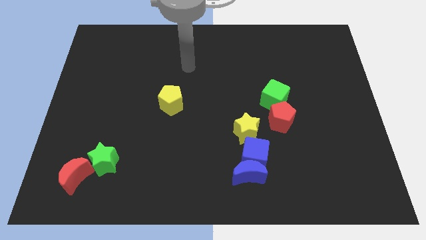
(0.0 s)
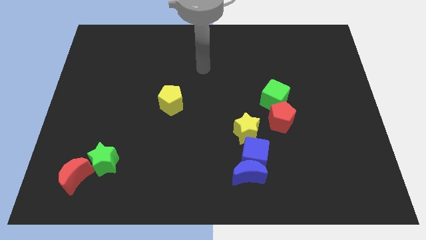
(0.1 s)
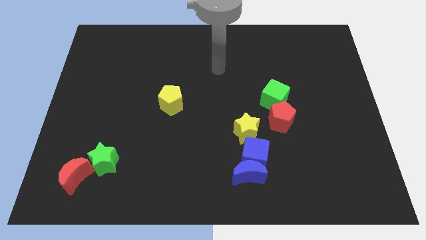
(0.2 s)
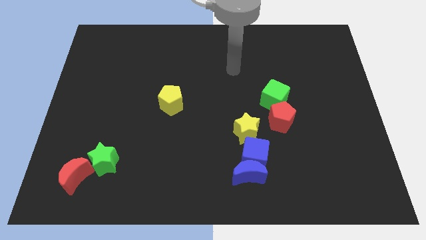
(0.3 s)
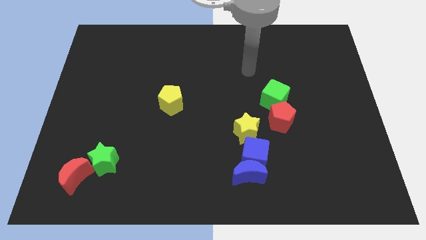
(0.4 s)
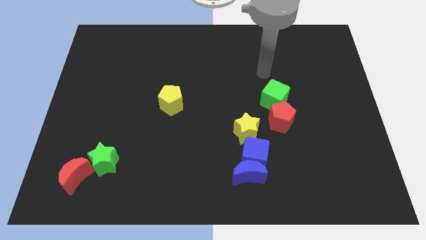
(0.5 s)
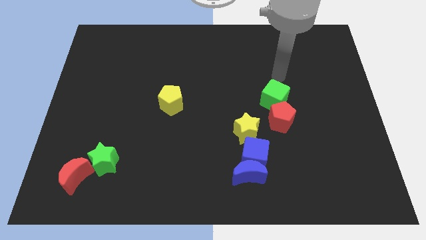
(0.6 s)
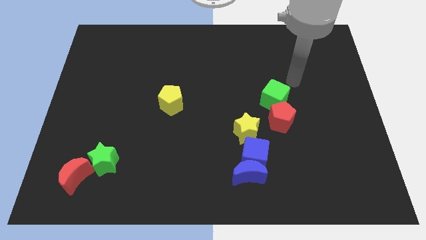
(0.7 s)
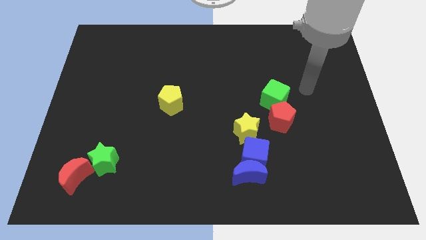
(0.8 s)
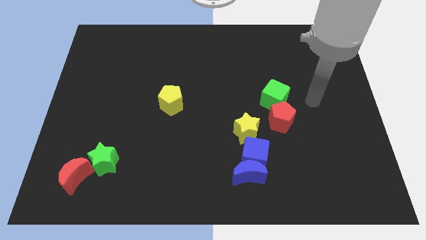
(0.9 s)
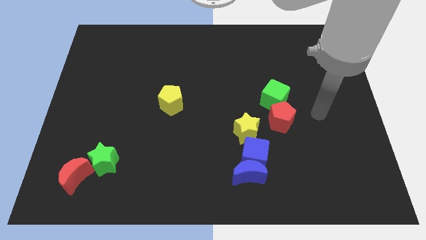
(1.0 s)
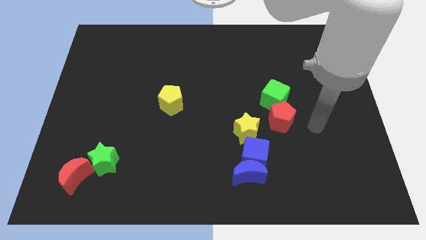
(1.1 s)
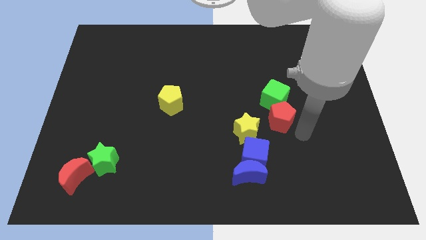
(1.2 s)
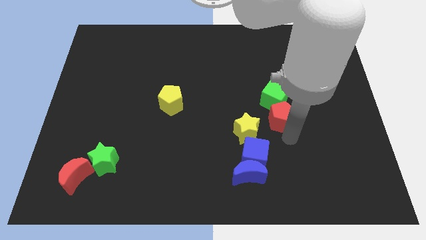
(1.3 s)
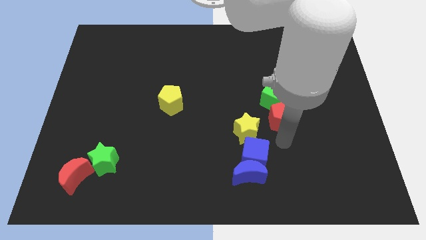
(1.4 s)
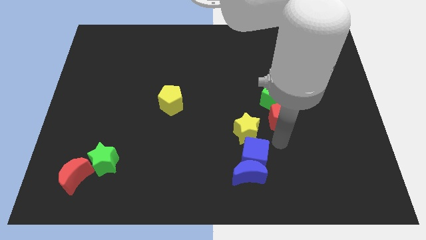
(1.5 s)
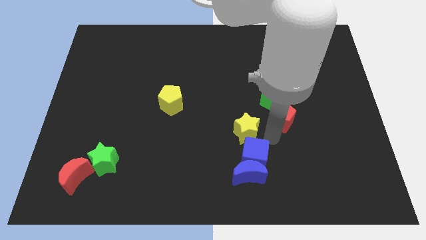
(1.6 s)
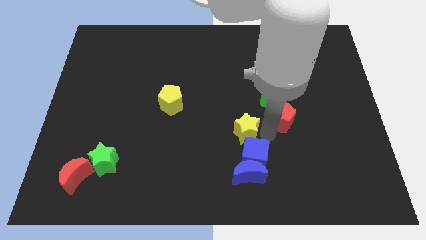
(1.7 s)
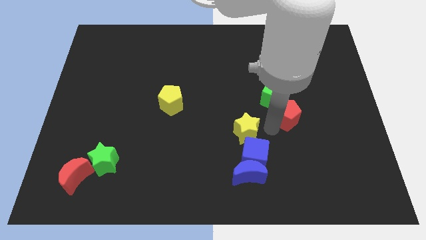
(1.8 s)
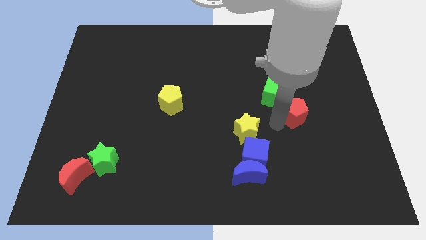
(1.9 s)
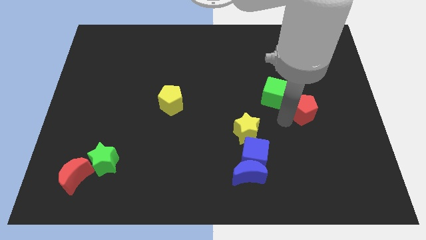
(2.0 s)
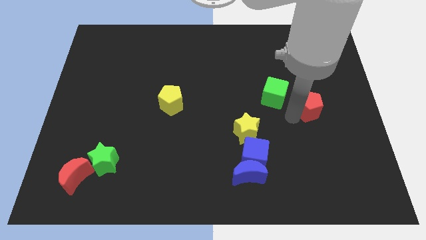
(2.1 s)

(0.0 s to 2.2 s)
separate the red pentagon and the green cube

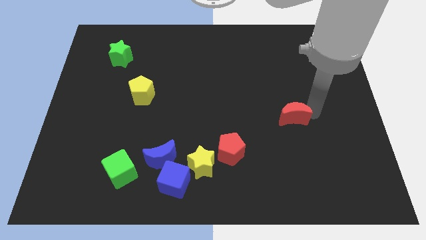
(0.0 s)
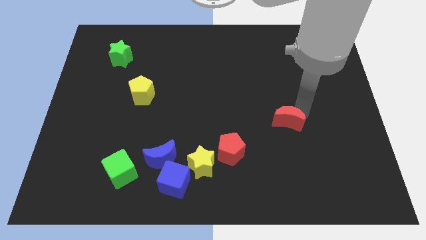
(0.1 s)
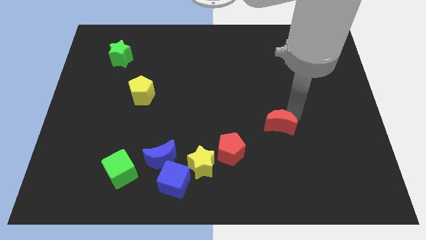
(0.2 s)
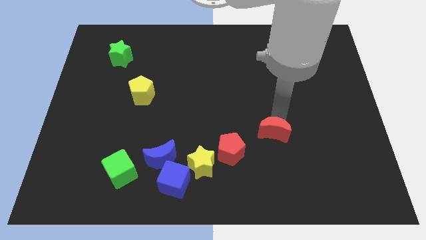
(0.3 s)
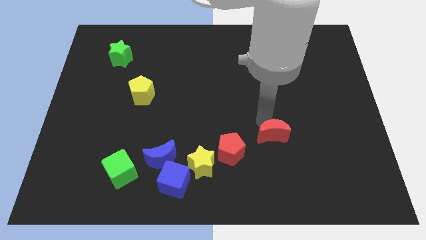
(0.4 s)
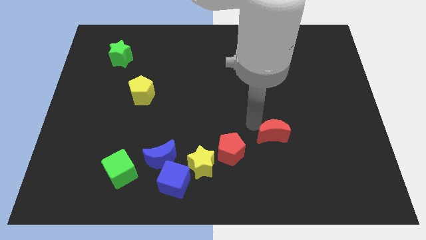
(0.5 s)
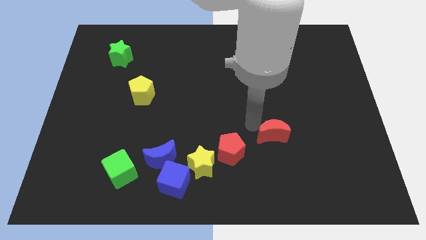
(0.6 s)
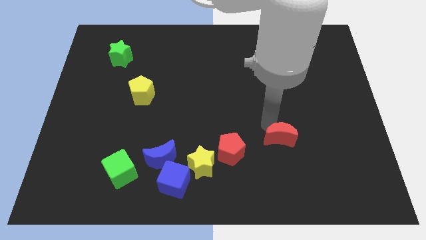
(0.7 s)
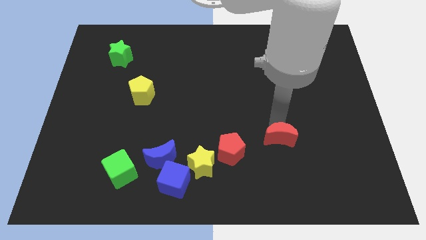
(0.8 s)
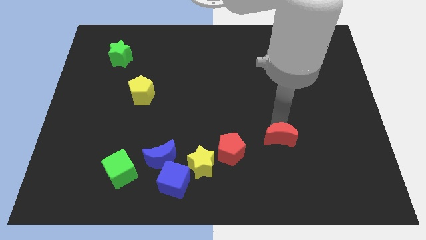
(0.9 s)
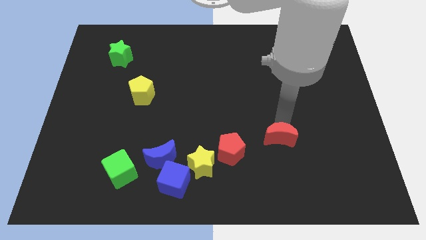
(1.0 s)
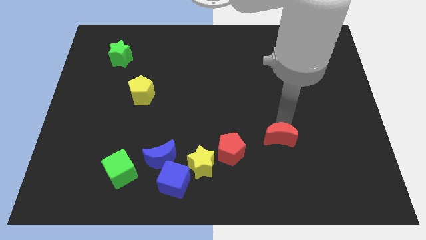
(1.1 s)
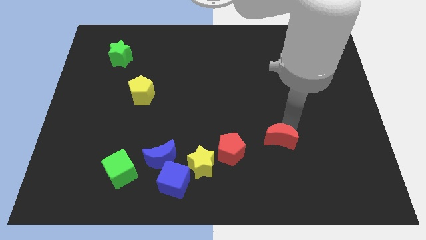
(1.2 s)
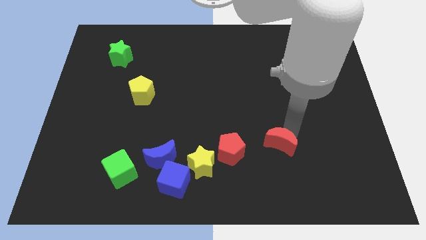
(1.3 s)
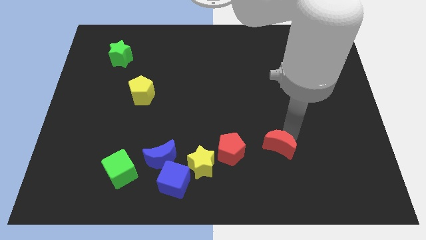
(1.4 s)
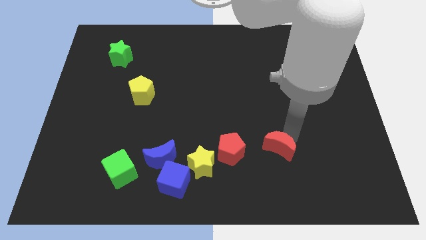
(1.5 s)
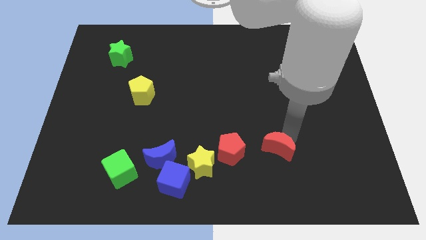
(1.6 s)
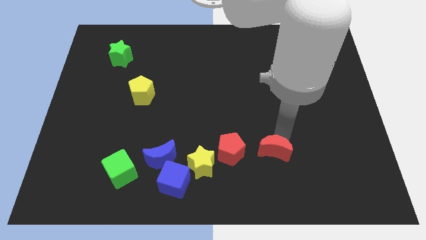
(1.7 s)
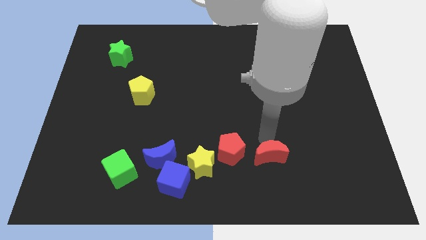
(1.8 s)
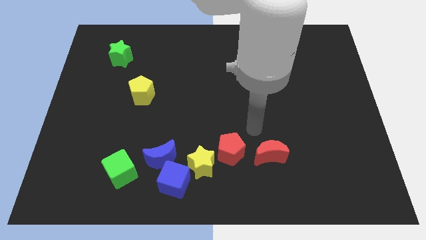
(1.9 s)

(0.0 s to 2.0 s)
move the red crescent to the right of red pentagon

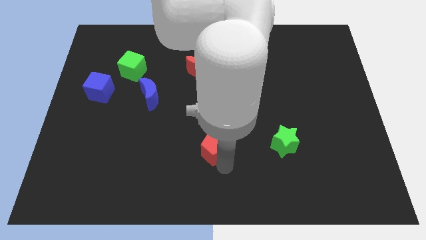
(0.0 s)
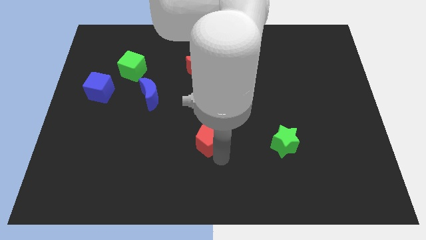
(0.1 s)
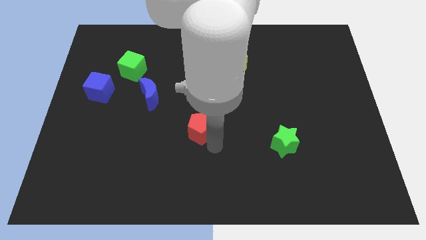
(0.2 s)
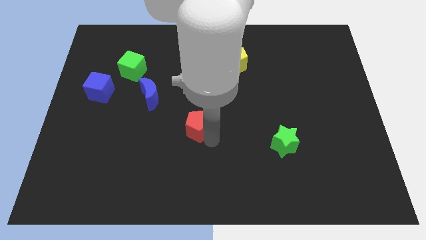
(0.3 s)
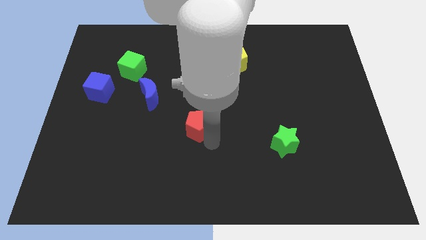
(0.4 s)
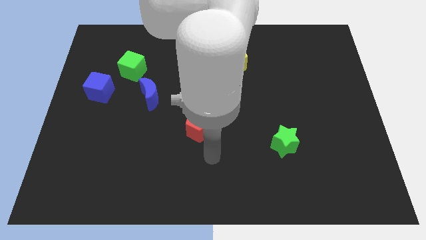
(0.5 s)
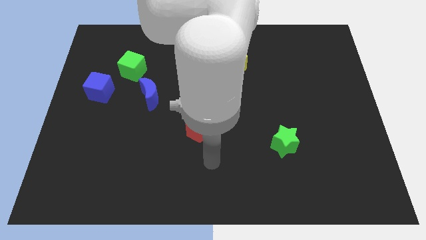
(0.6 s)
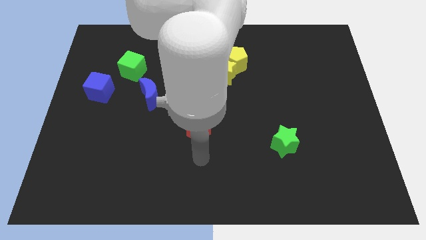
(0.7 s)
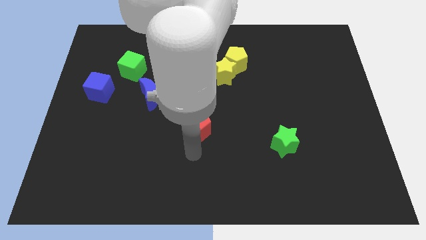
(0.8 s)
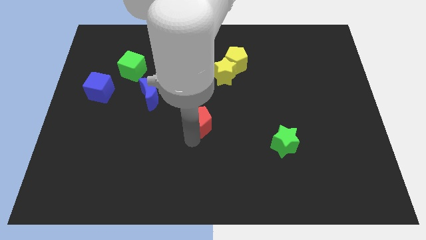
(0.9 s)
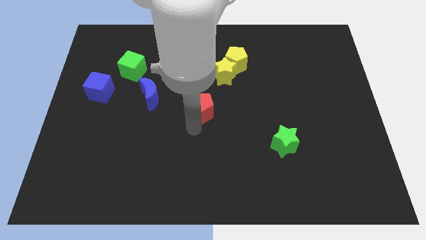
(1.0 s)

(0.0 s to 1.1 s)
place the red pentagon at the bottom of red moon

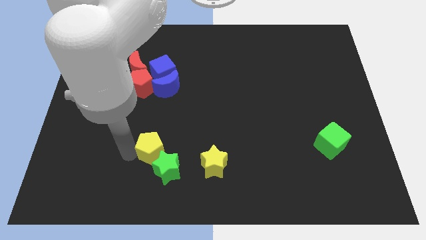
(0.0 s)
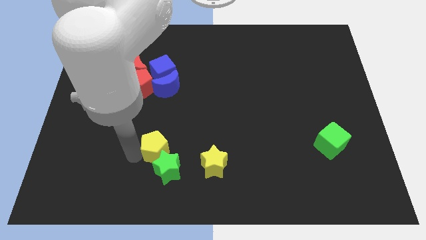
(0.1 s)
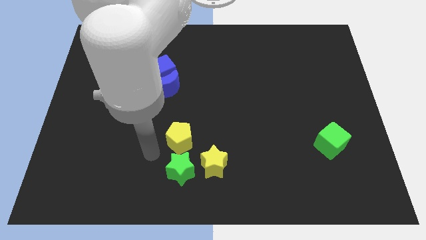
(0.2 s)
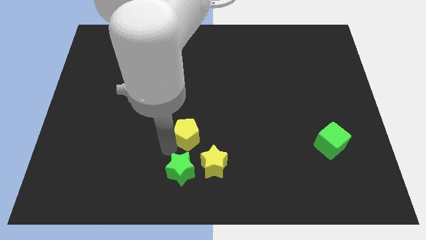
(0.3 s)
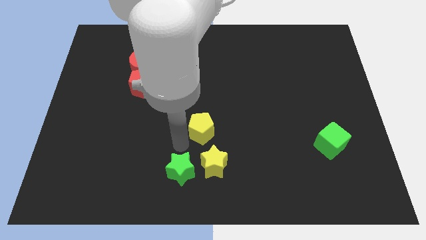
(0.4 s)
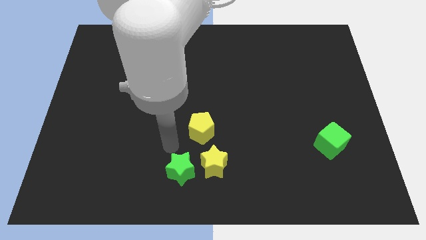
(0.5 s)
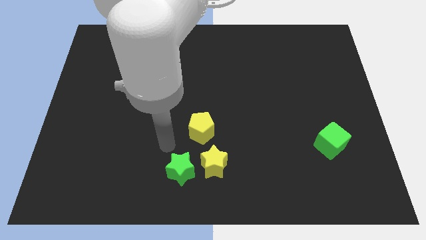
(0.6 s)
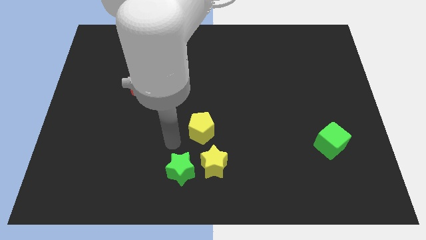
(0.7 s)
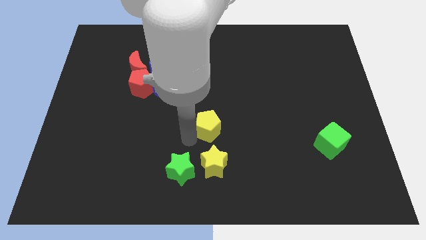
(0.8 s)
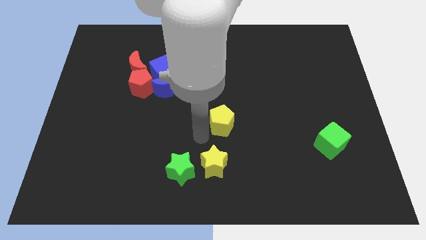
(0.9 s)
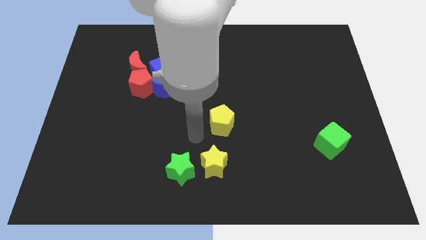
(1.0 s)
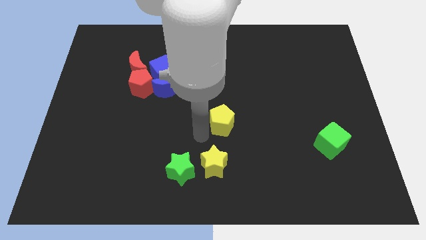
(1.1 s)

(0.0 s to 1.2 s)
separate the yellow pentagon from the green star

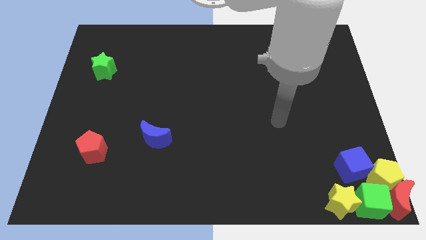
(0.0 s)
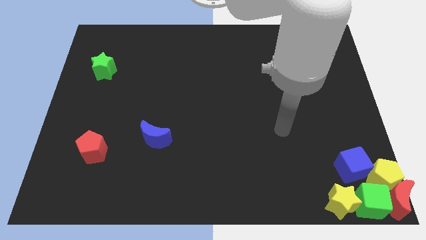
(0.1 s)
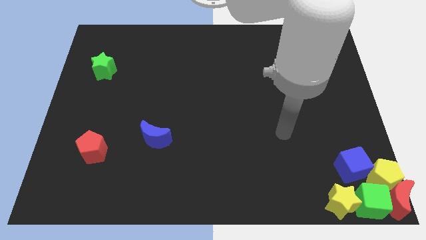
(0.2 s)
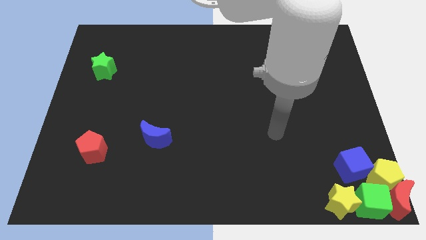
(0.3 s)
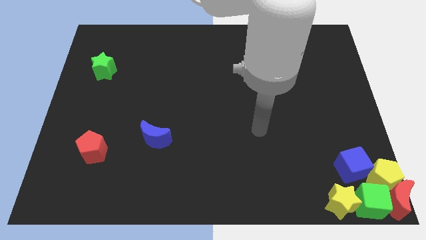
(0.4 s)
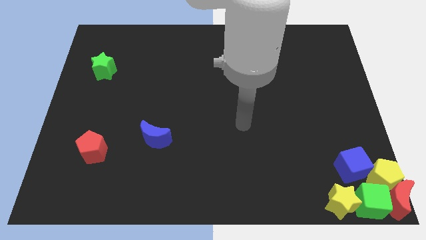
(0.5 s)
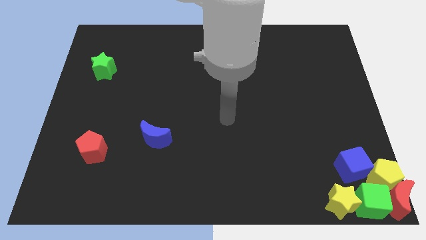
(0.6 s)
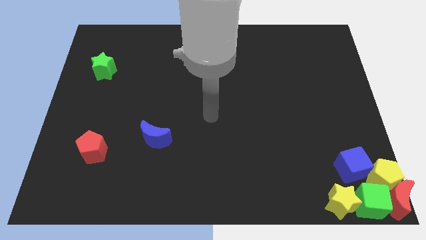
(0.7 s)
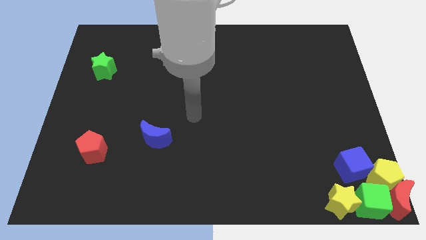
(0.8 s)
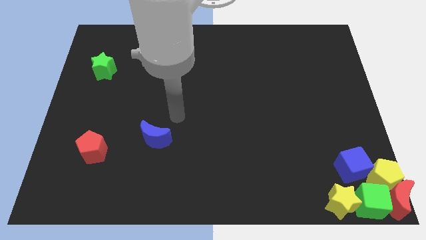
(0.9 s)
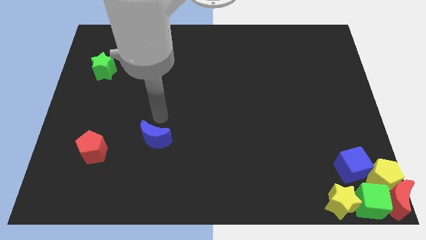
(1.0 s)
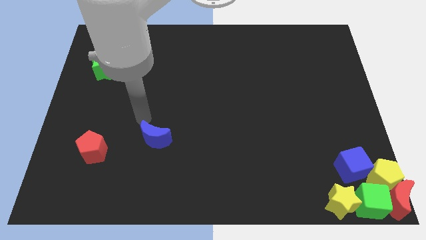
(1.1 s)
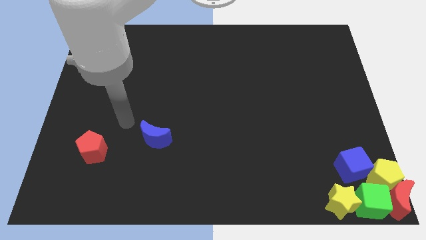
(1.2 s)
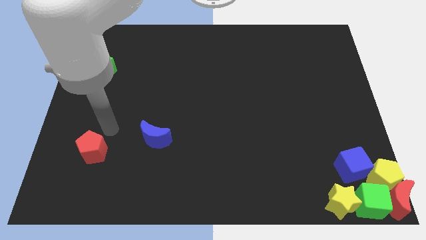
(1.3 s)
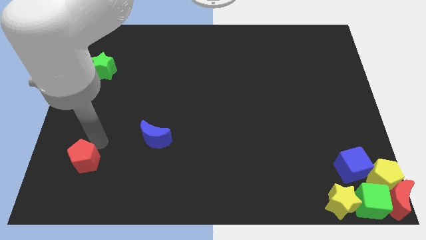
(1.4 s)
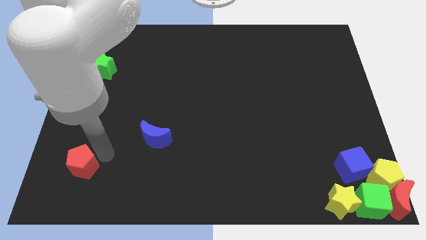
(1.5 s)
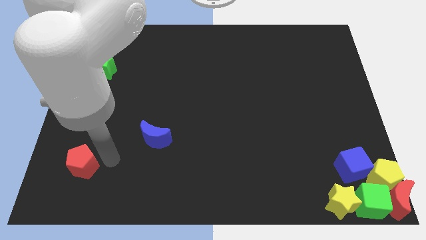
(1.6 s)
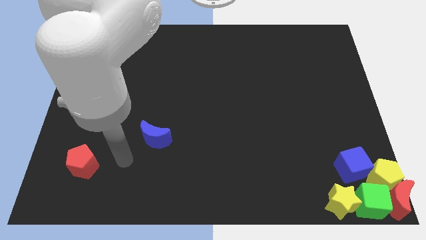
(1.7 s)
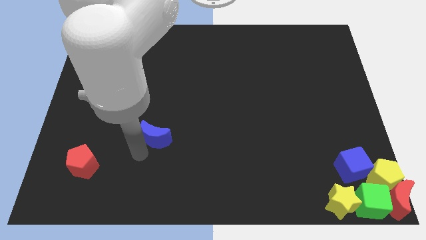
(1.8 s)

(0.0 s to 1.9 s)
push the red pentagon slightly to the bottom side of the board

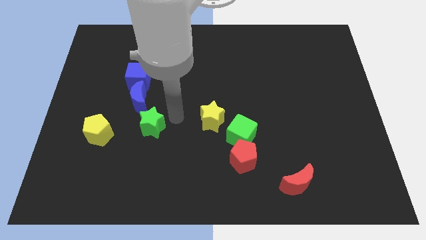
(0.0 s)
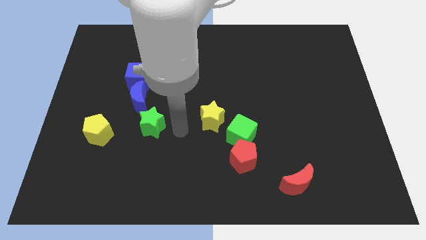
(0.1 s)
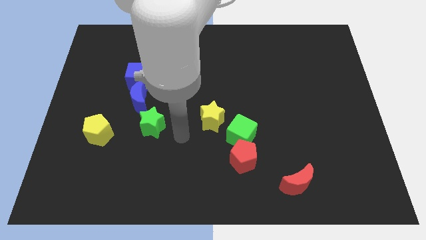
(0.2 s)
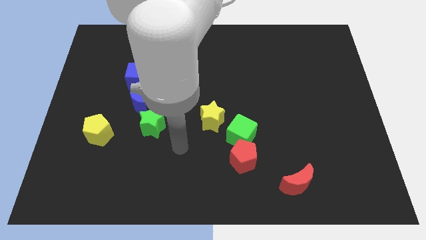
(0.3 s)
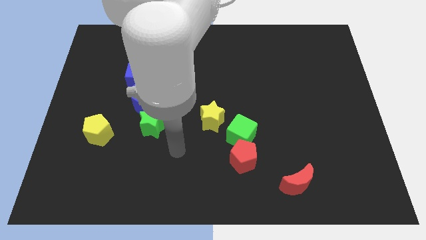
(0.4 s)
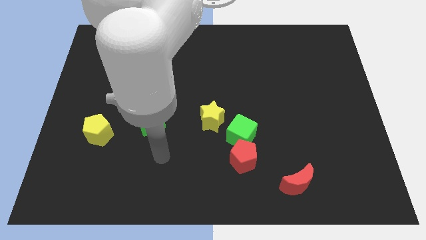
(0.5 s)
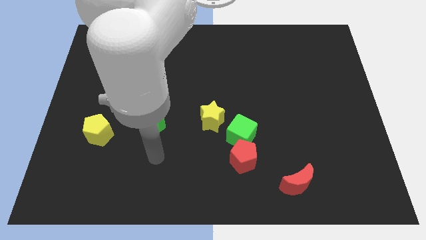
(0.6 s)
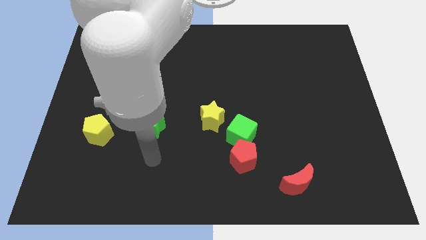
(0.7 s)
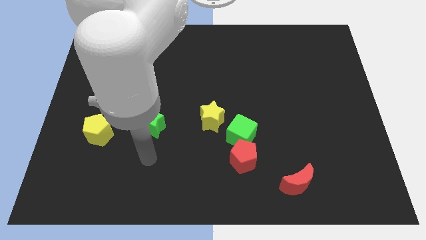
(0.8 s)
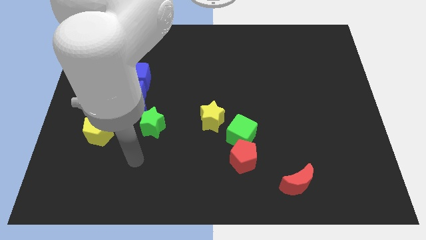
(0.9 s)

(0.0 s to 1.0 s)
place the arm below the green star
